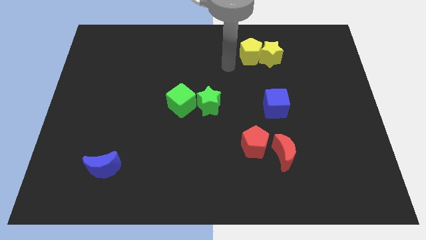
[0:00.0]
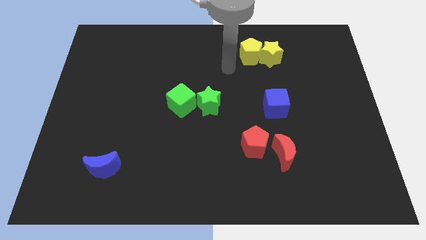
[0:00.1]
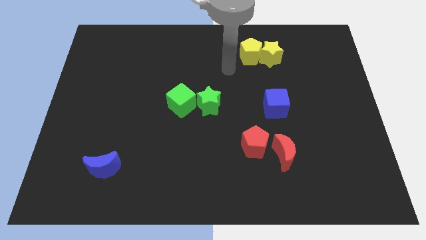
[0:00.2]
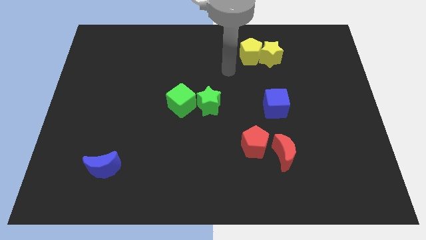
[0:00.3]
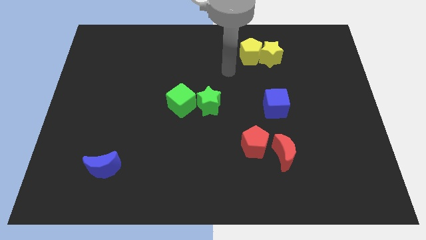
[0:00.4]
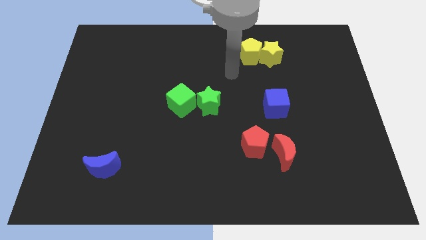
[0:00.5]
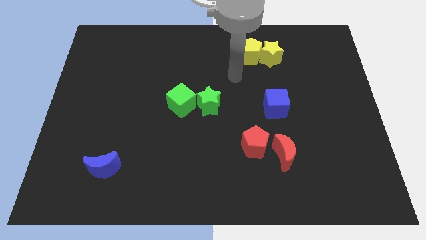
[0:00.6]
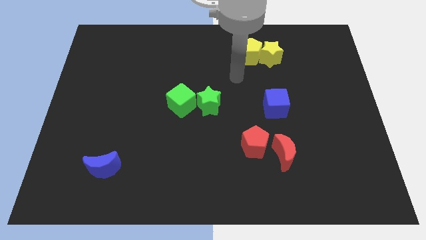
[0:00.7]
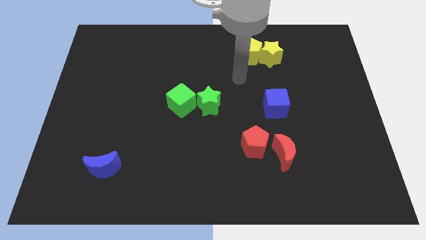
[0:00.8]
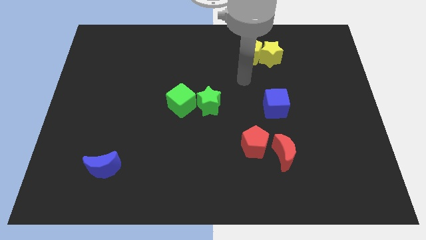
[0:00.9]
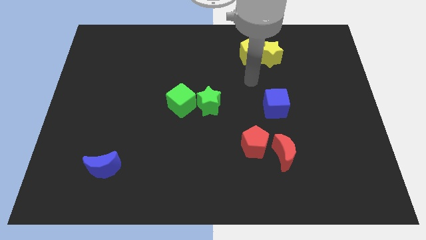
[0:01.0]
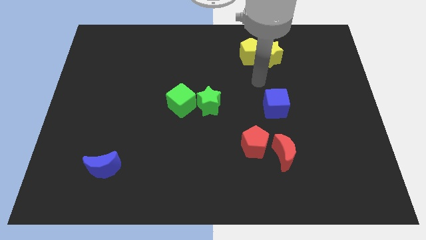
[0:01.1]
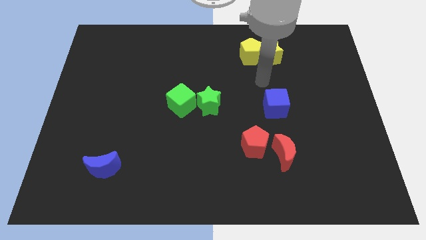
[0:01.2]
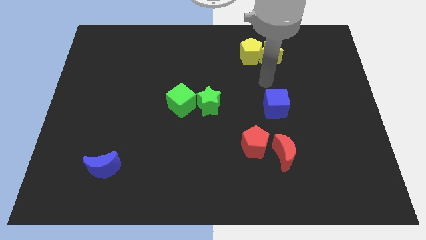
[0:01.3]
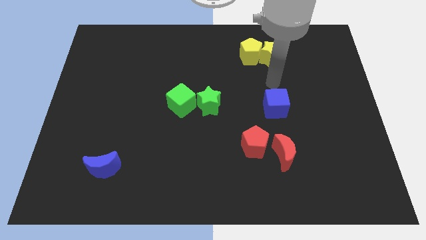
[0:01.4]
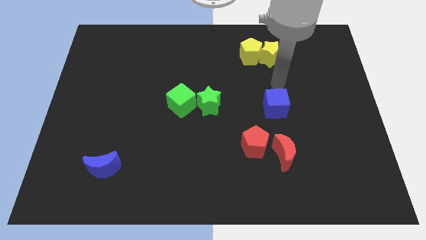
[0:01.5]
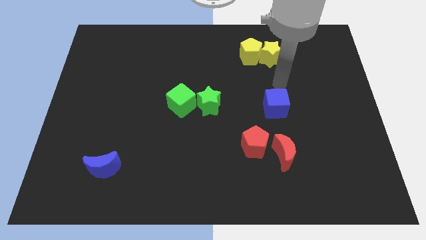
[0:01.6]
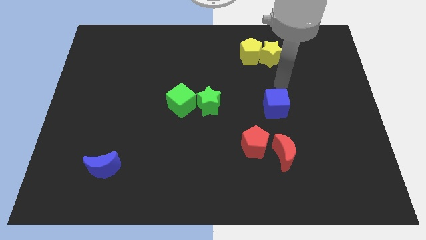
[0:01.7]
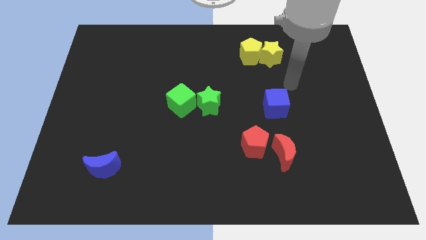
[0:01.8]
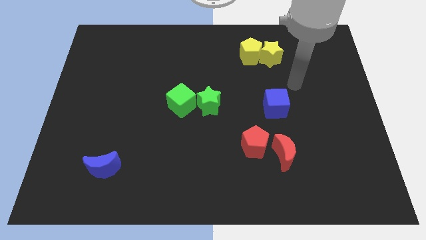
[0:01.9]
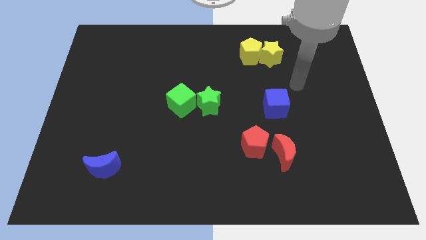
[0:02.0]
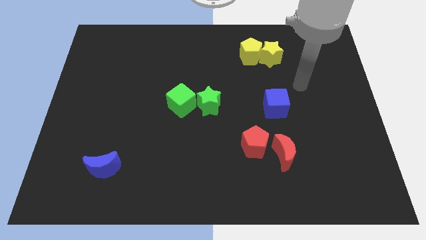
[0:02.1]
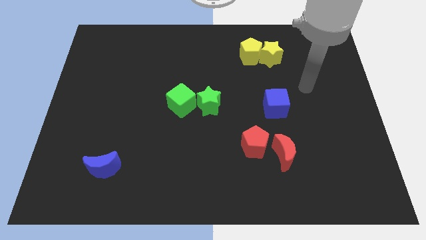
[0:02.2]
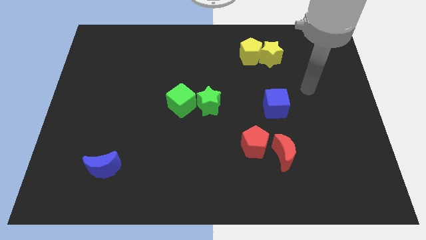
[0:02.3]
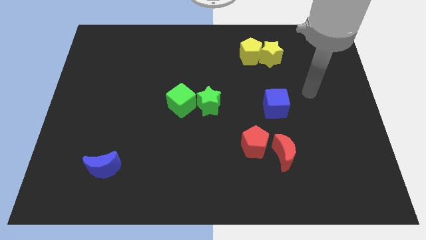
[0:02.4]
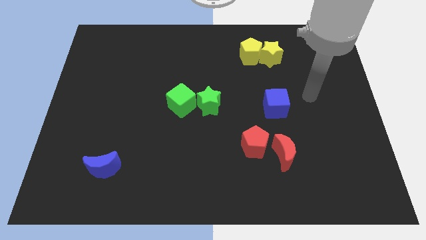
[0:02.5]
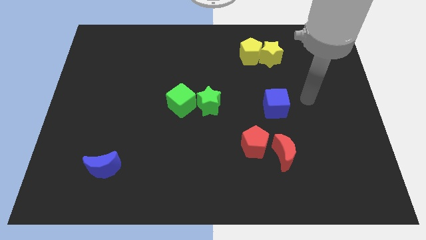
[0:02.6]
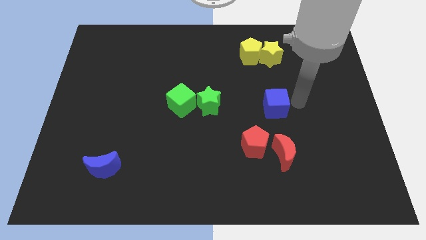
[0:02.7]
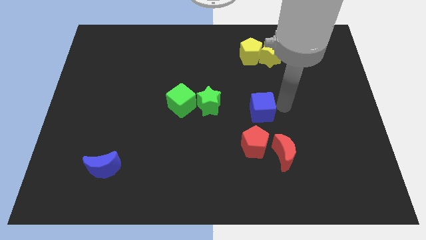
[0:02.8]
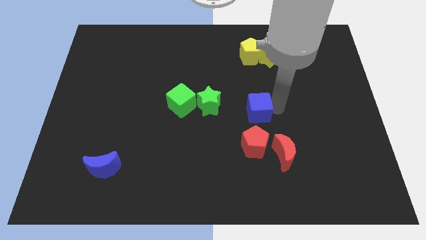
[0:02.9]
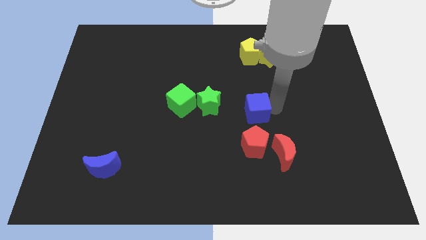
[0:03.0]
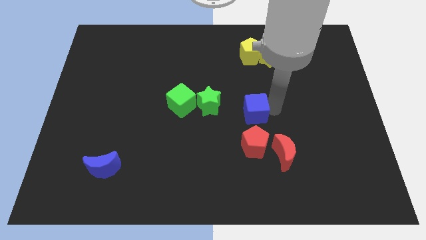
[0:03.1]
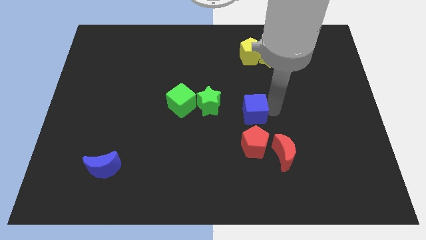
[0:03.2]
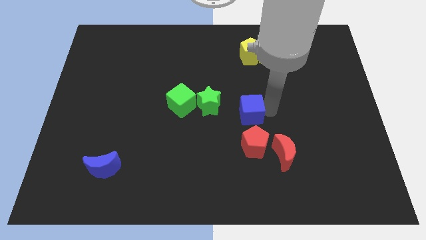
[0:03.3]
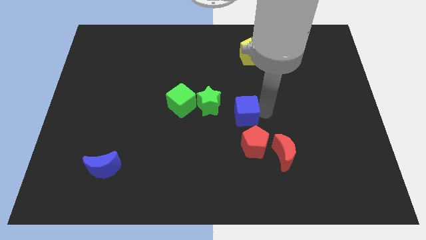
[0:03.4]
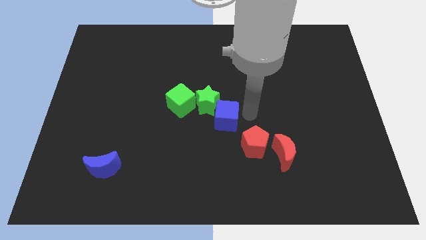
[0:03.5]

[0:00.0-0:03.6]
place the blue cube in between the green star and the red pentagon

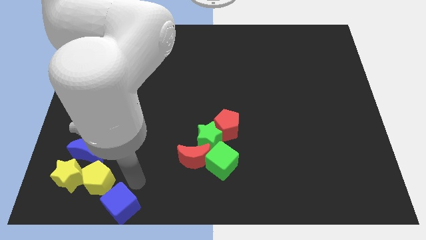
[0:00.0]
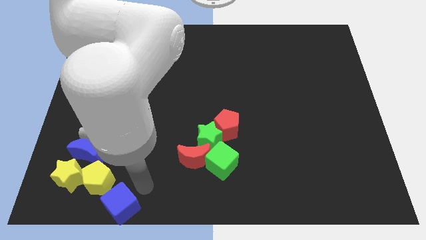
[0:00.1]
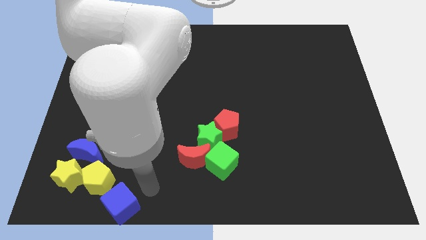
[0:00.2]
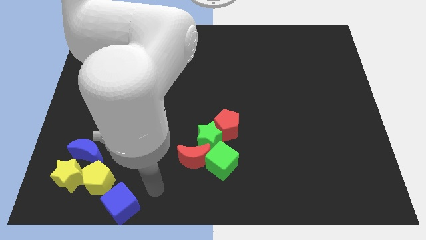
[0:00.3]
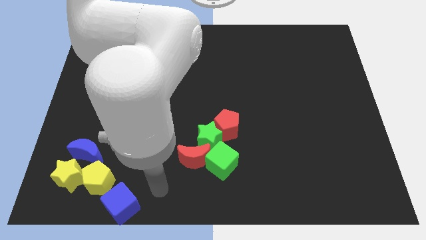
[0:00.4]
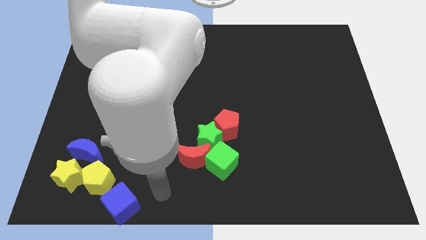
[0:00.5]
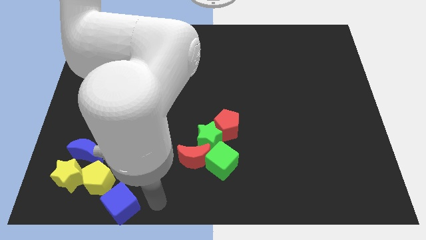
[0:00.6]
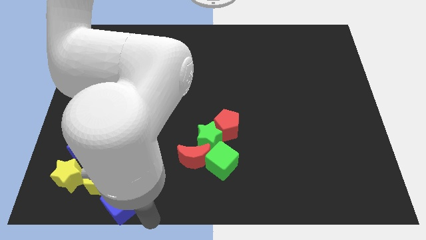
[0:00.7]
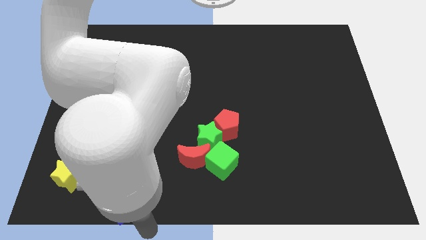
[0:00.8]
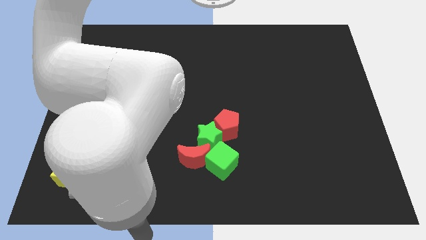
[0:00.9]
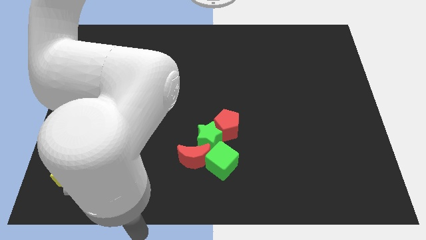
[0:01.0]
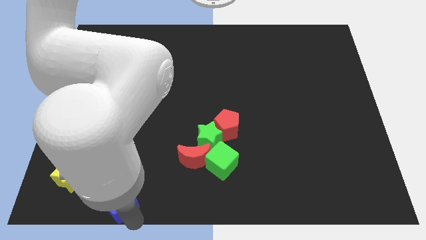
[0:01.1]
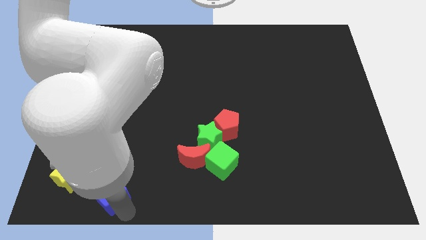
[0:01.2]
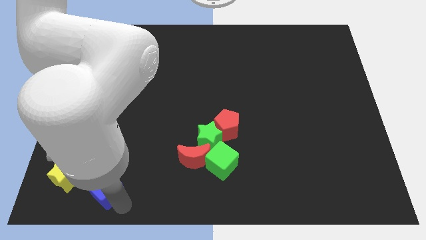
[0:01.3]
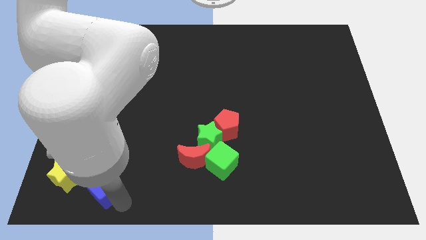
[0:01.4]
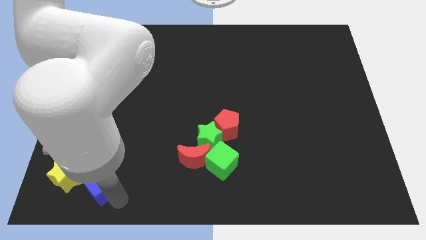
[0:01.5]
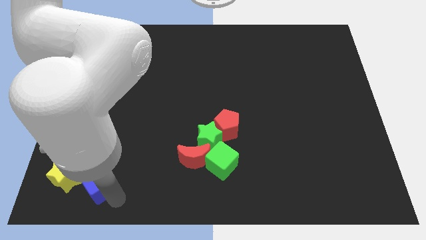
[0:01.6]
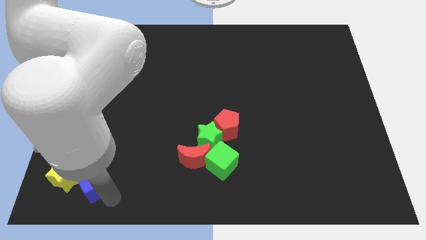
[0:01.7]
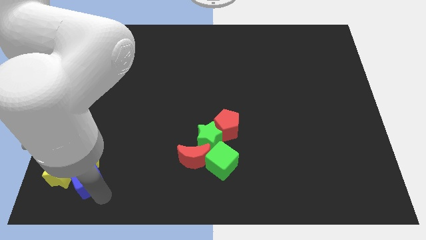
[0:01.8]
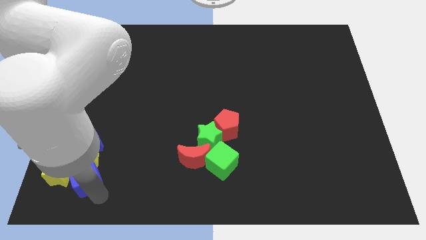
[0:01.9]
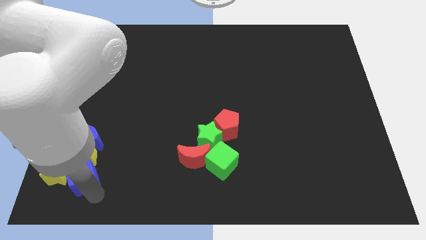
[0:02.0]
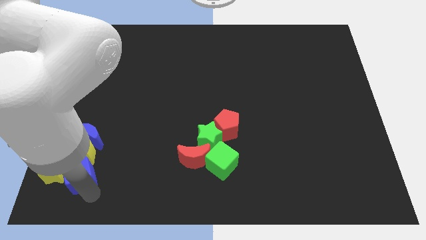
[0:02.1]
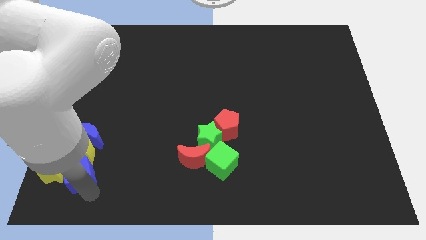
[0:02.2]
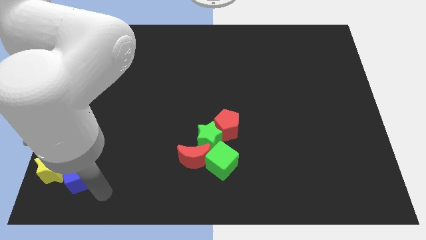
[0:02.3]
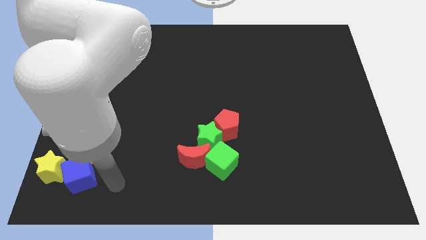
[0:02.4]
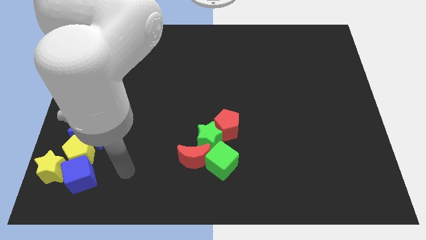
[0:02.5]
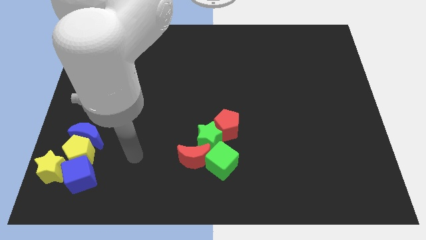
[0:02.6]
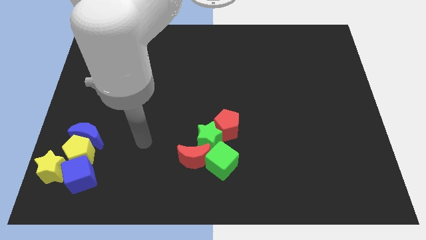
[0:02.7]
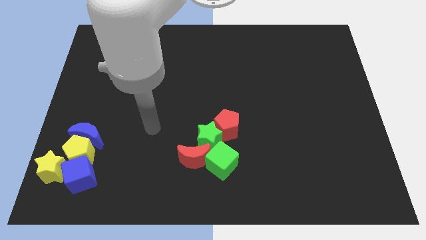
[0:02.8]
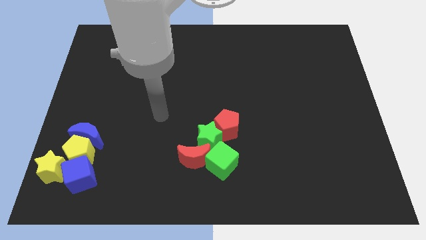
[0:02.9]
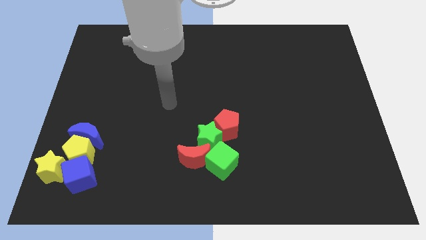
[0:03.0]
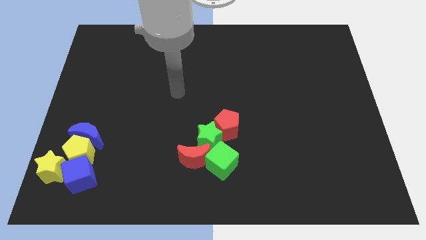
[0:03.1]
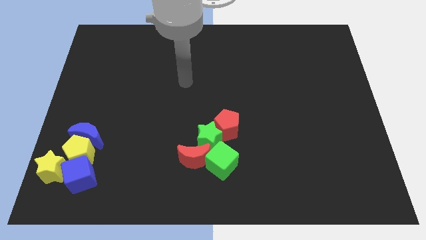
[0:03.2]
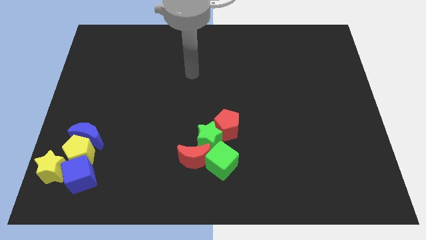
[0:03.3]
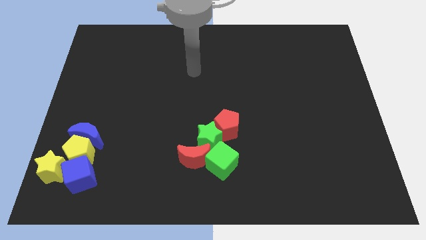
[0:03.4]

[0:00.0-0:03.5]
move the blue cube right side of yellow star

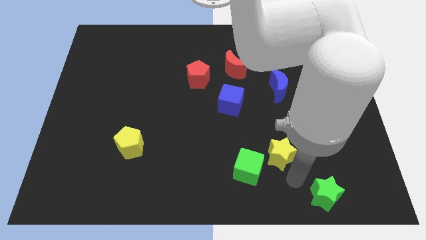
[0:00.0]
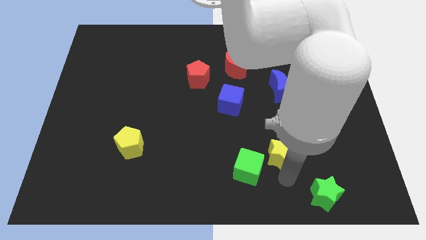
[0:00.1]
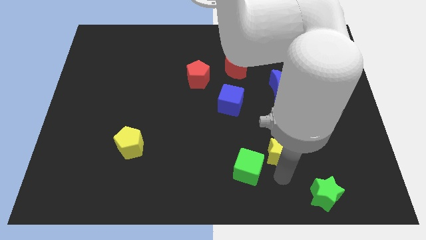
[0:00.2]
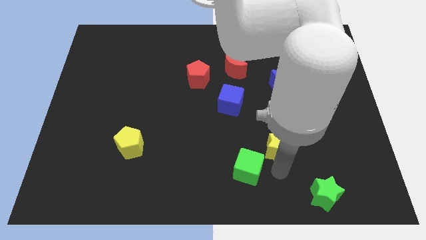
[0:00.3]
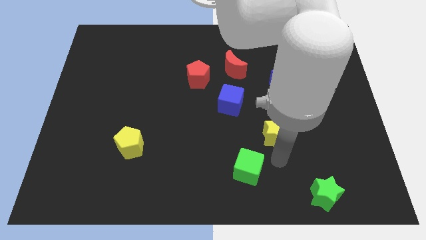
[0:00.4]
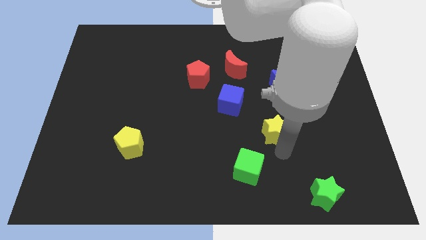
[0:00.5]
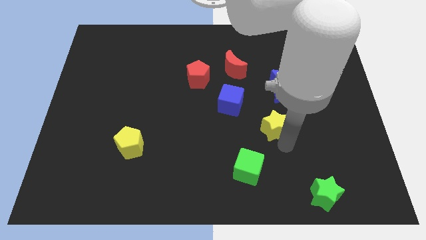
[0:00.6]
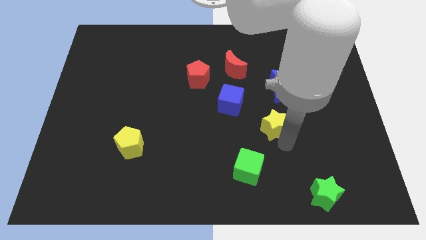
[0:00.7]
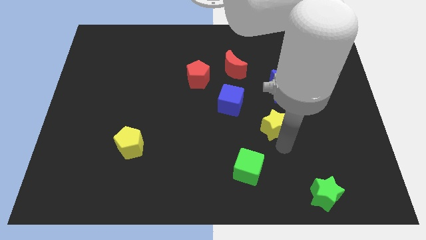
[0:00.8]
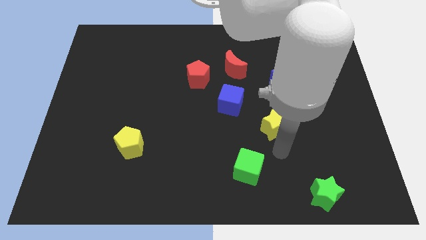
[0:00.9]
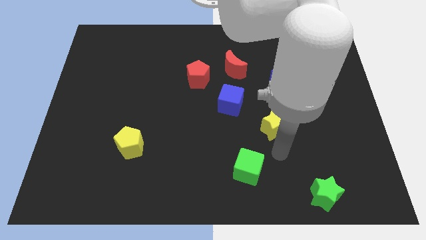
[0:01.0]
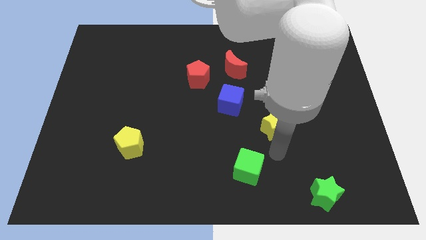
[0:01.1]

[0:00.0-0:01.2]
place the yellow star below the blue crescent

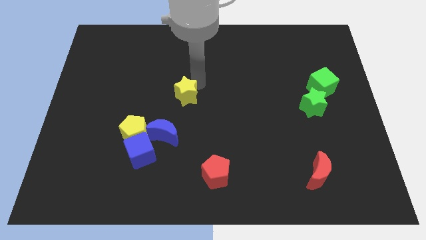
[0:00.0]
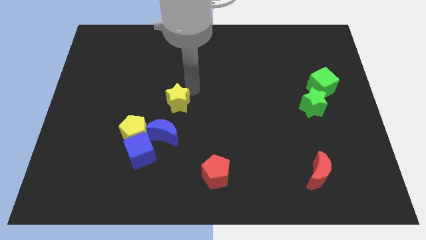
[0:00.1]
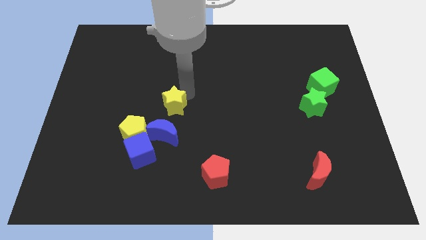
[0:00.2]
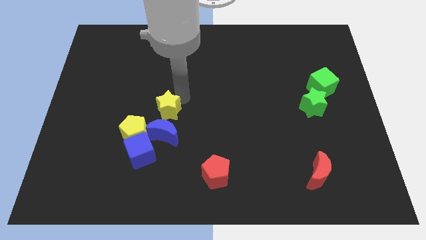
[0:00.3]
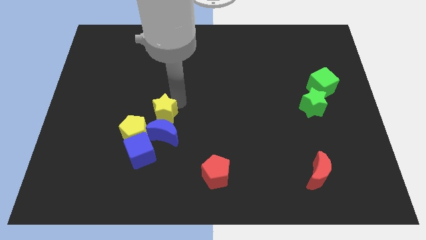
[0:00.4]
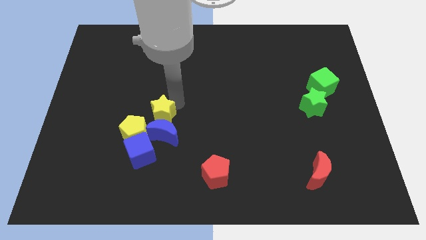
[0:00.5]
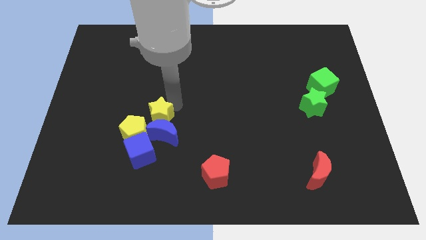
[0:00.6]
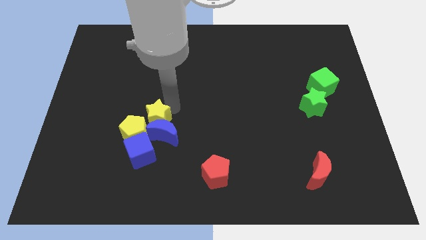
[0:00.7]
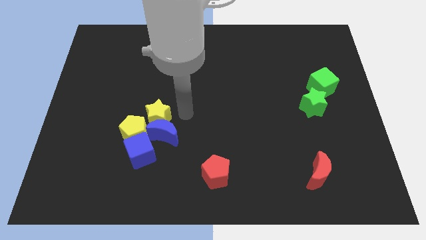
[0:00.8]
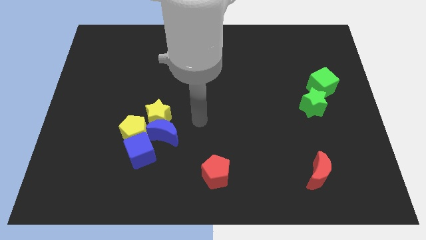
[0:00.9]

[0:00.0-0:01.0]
place the yellow star above the blue crescent
